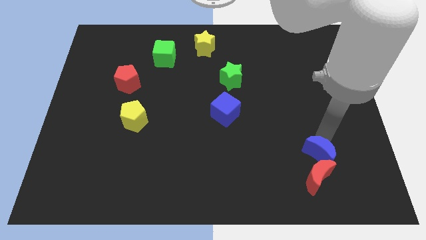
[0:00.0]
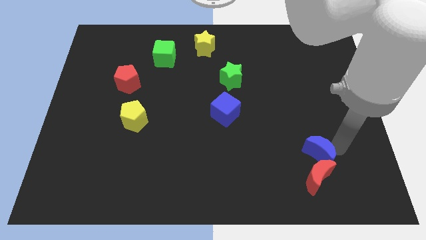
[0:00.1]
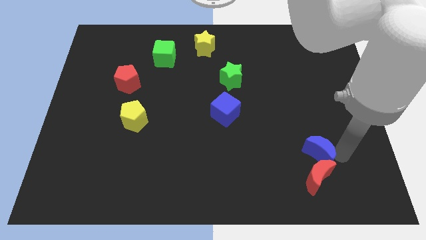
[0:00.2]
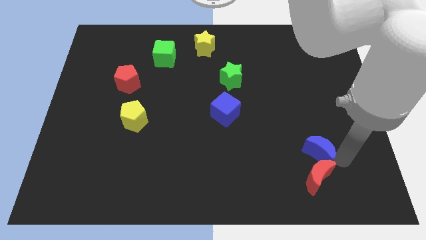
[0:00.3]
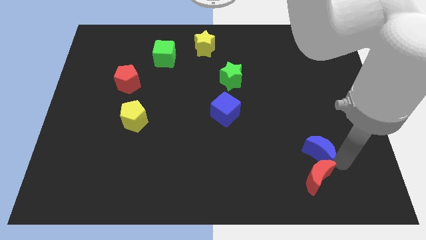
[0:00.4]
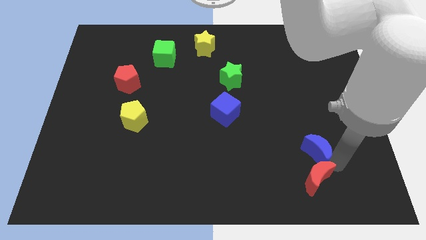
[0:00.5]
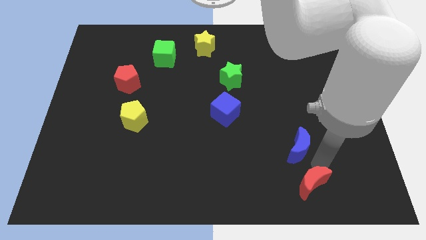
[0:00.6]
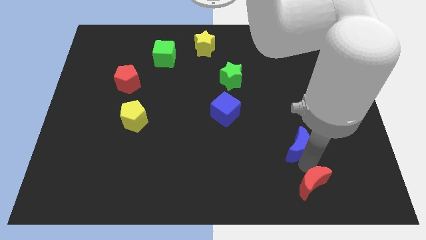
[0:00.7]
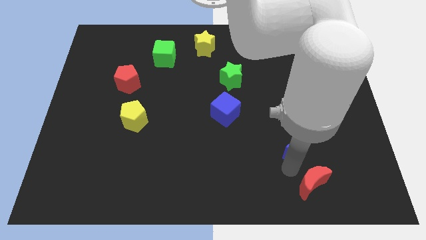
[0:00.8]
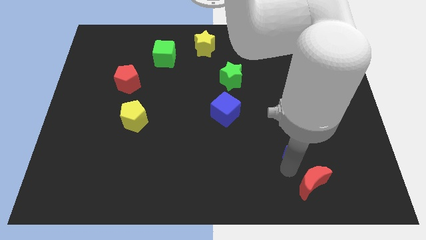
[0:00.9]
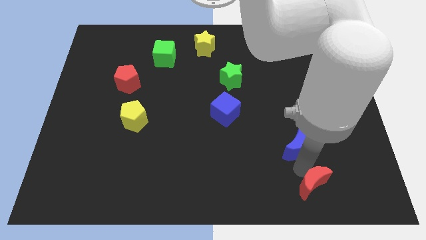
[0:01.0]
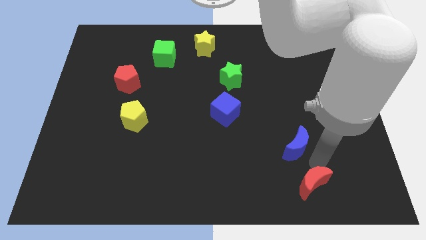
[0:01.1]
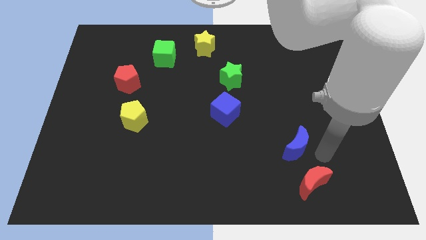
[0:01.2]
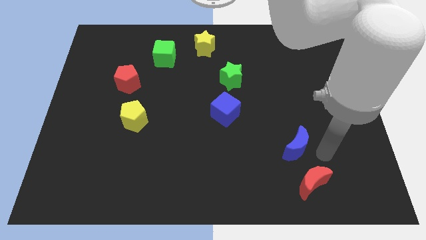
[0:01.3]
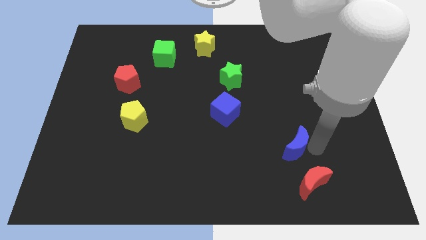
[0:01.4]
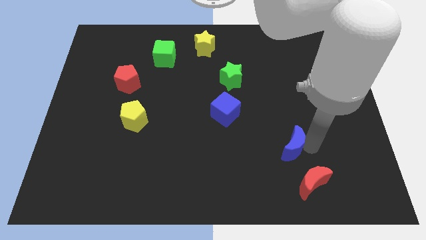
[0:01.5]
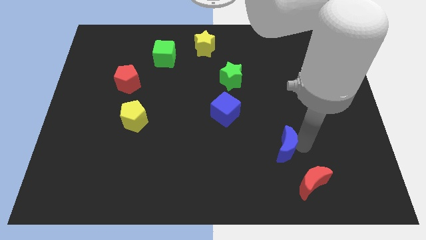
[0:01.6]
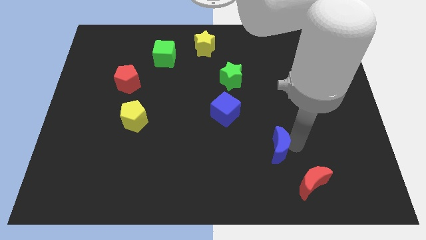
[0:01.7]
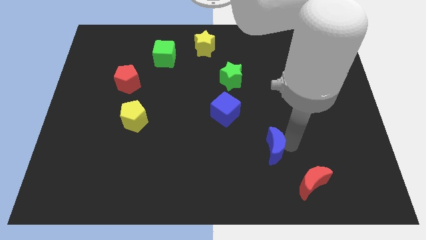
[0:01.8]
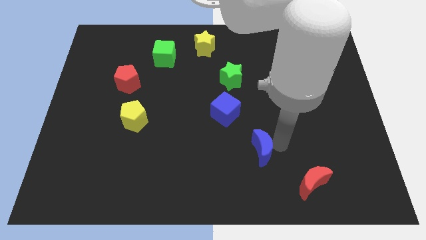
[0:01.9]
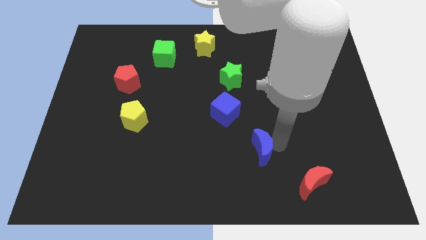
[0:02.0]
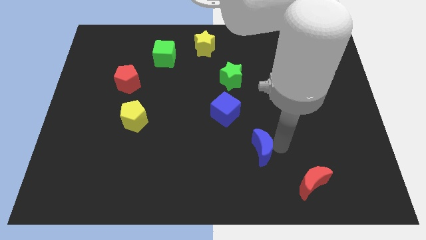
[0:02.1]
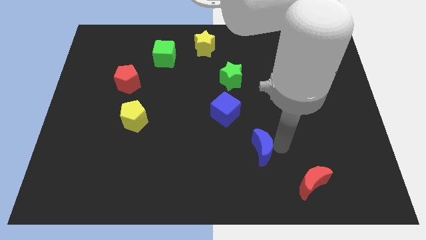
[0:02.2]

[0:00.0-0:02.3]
separate the red moon and blue moon

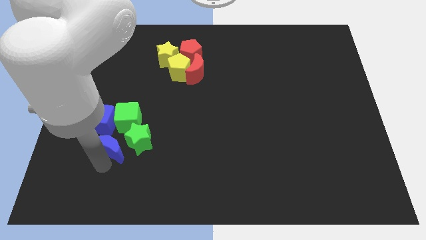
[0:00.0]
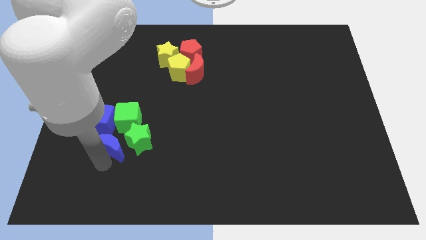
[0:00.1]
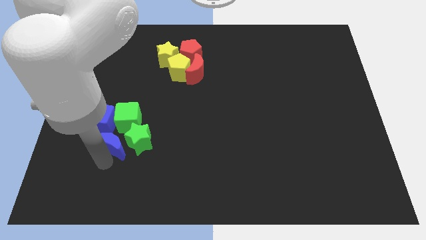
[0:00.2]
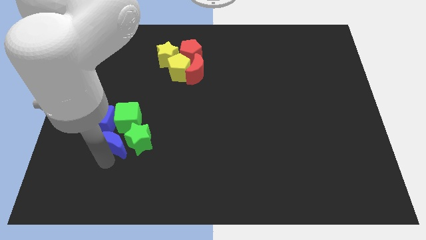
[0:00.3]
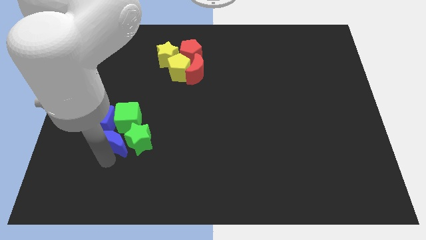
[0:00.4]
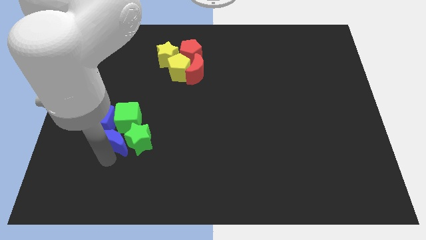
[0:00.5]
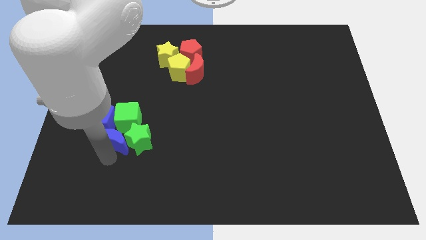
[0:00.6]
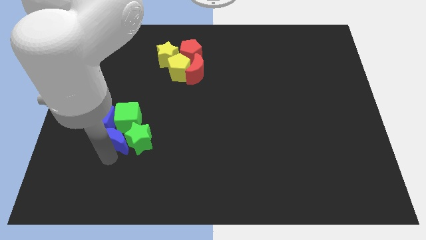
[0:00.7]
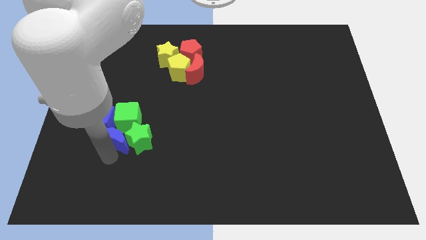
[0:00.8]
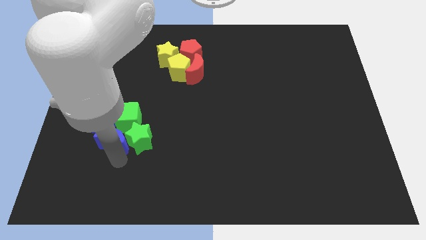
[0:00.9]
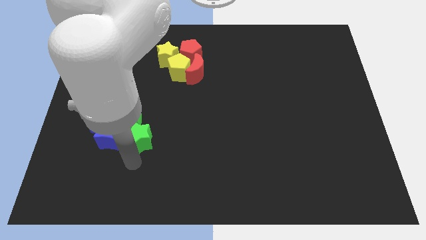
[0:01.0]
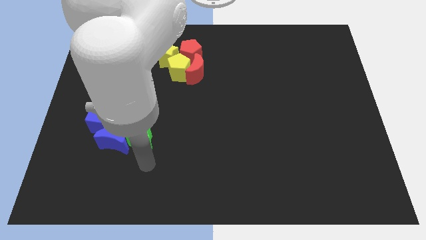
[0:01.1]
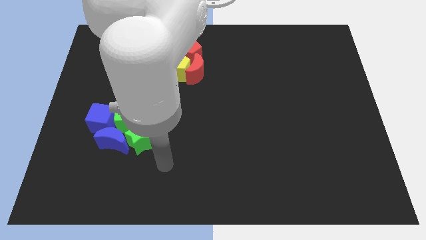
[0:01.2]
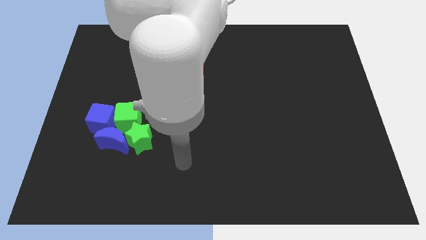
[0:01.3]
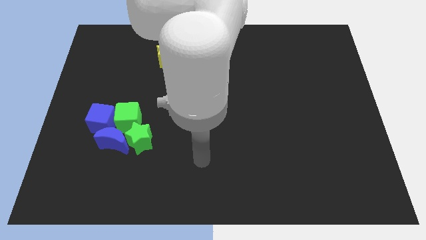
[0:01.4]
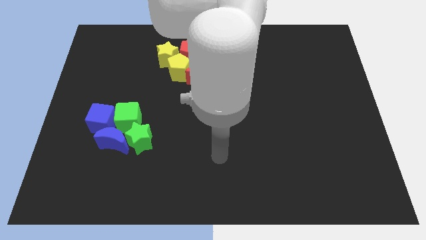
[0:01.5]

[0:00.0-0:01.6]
push the blue crescent into the group of green blocks

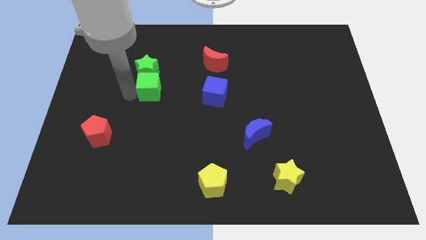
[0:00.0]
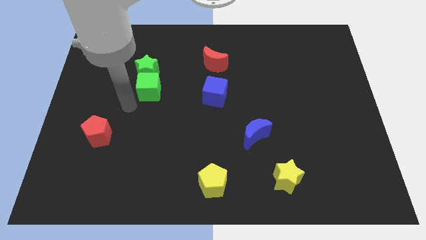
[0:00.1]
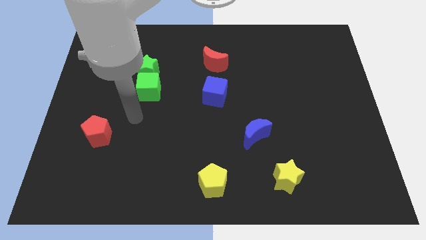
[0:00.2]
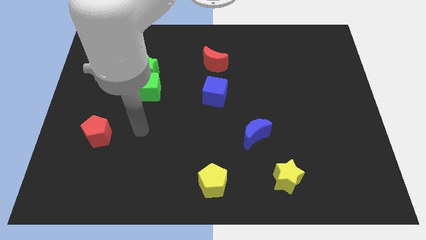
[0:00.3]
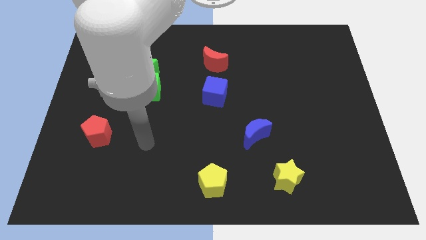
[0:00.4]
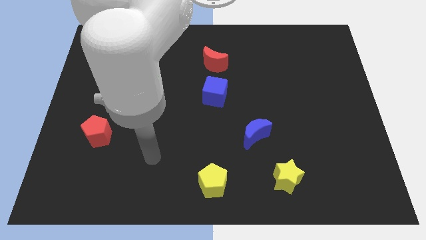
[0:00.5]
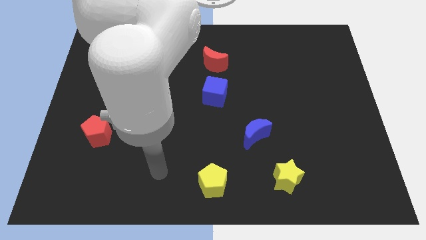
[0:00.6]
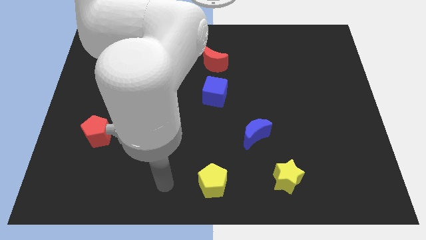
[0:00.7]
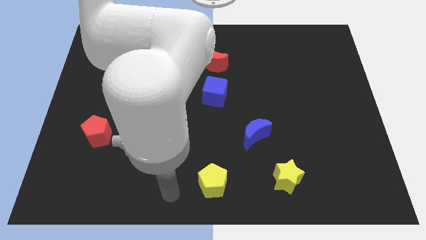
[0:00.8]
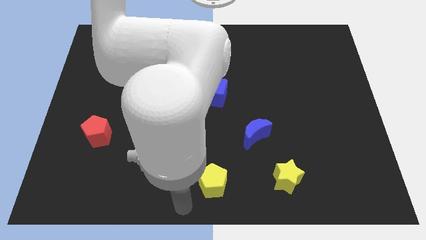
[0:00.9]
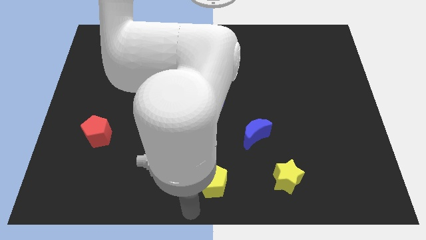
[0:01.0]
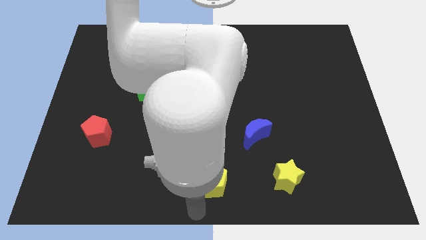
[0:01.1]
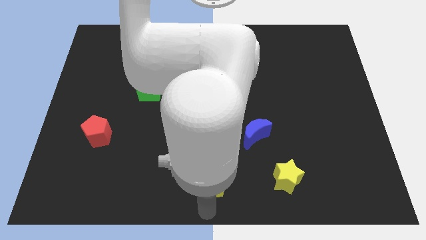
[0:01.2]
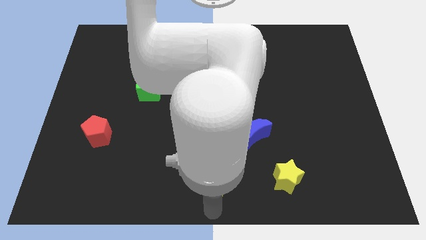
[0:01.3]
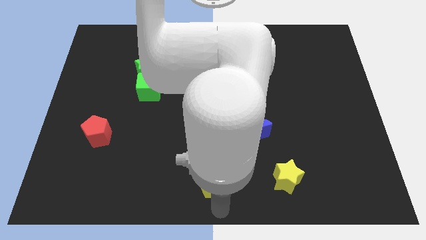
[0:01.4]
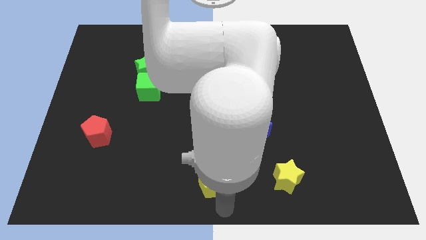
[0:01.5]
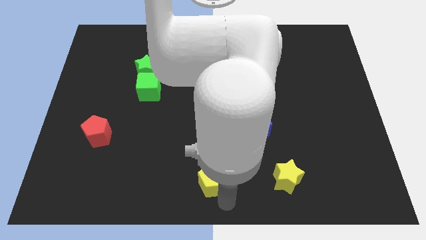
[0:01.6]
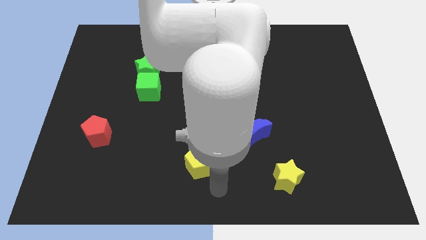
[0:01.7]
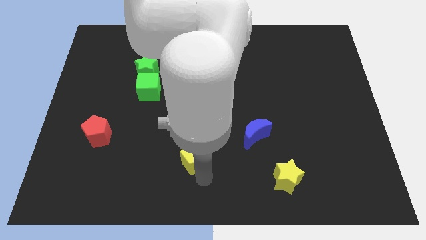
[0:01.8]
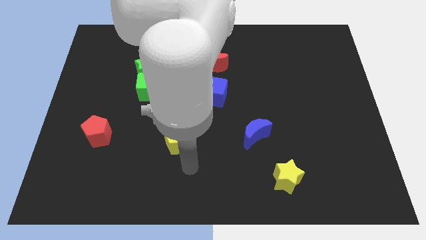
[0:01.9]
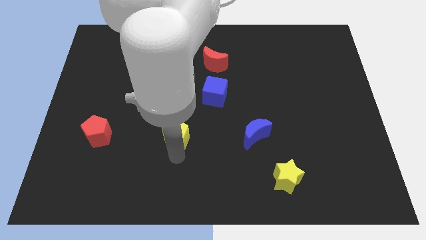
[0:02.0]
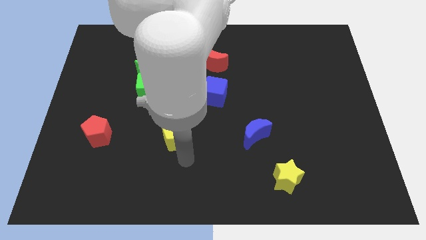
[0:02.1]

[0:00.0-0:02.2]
move the yellow pentagon to the right of the red pentagon

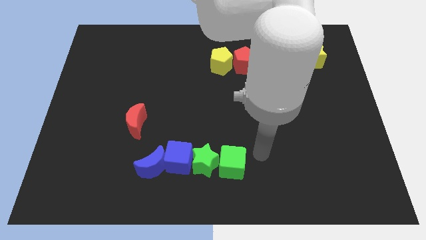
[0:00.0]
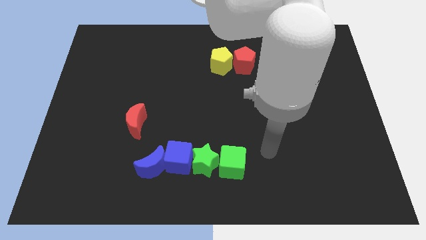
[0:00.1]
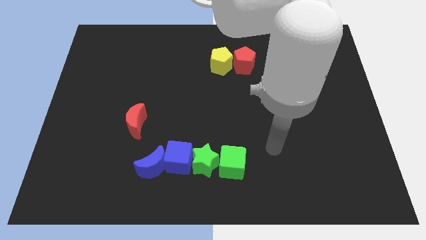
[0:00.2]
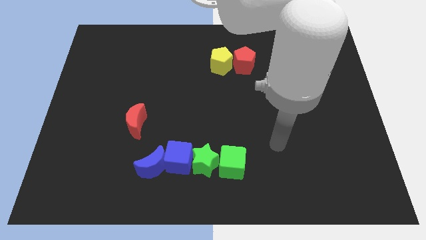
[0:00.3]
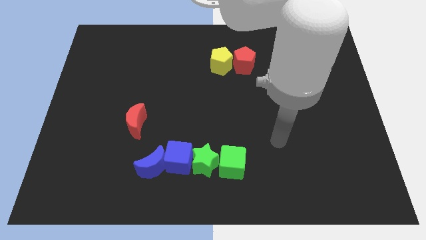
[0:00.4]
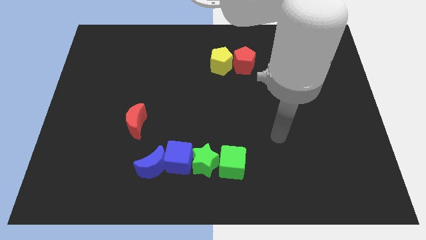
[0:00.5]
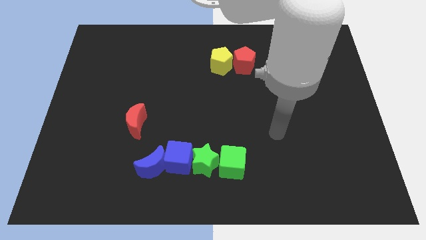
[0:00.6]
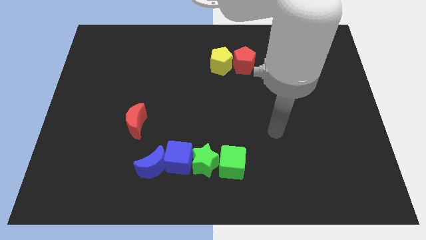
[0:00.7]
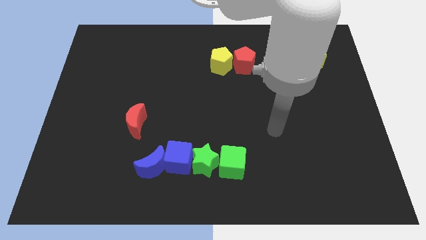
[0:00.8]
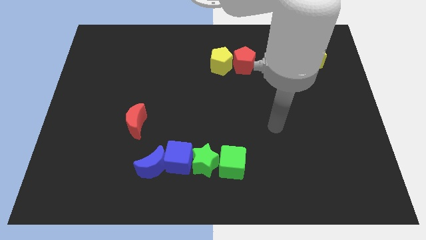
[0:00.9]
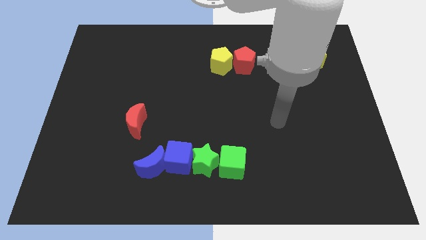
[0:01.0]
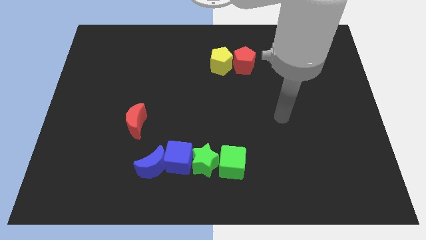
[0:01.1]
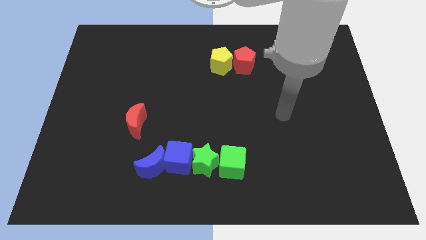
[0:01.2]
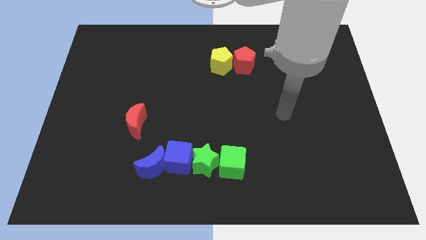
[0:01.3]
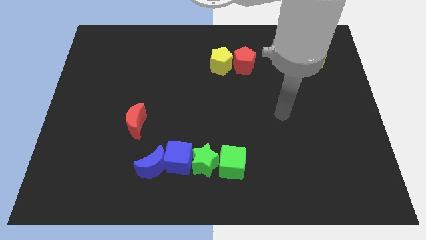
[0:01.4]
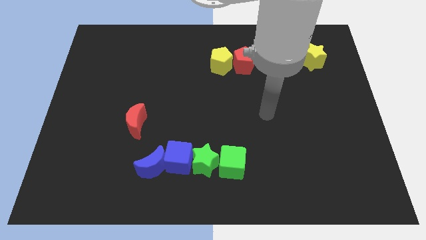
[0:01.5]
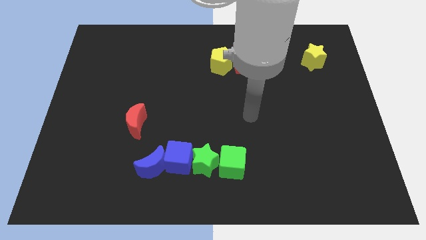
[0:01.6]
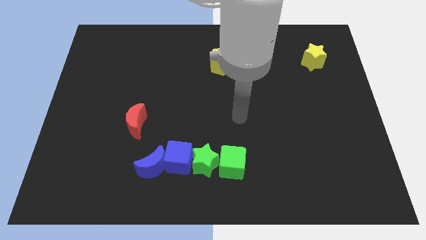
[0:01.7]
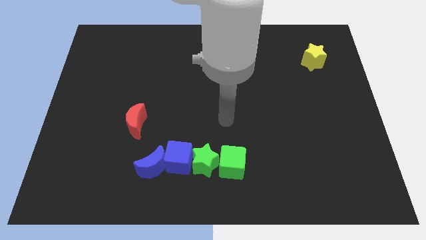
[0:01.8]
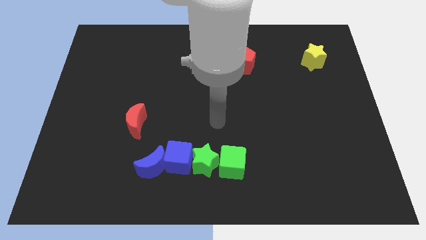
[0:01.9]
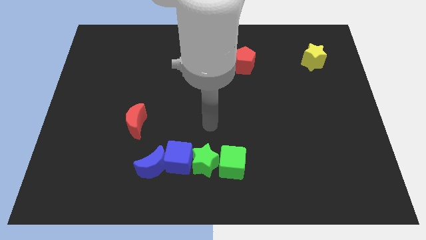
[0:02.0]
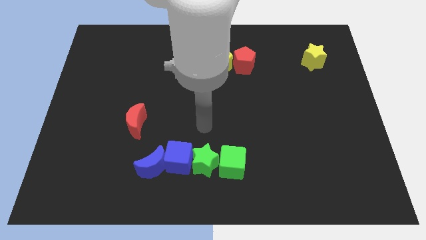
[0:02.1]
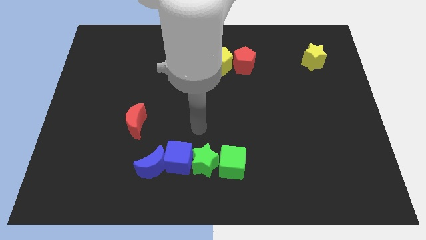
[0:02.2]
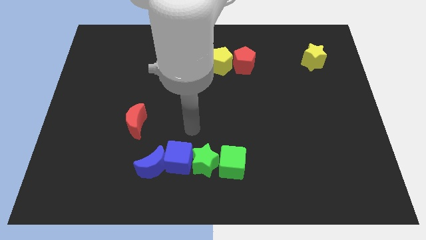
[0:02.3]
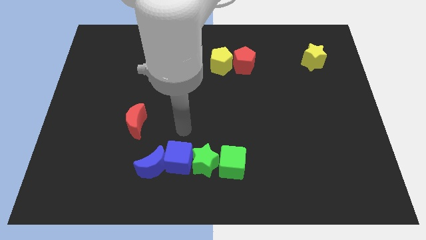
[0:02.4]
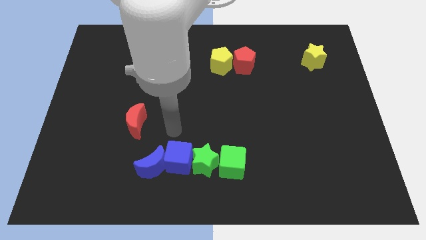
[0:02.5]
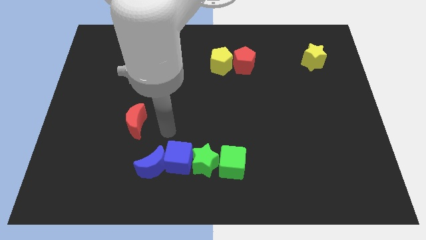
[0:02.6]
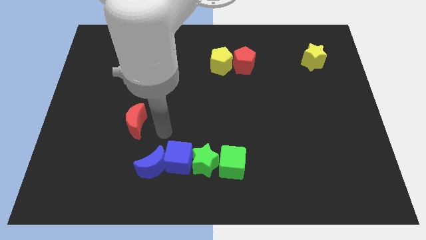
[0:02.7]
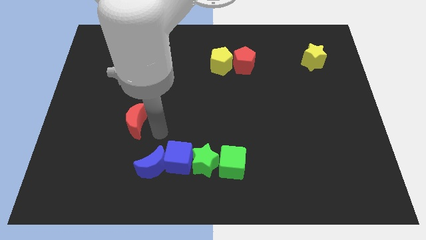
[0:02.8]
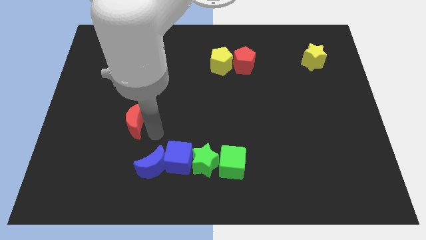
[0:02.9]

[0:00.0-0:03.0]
move your arm above the blue crescent
